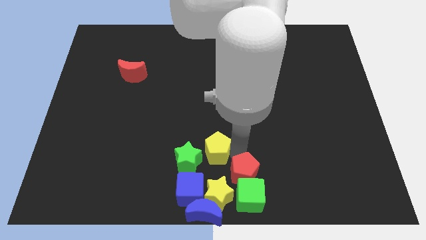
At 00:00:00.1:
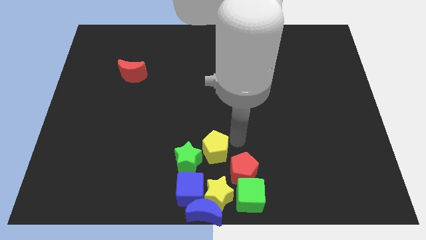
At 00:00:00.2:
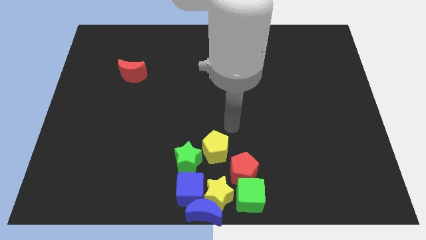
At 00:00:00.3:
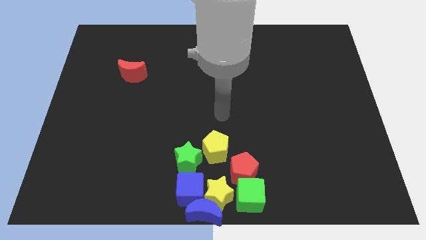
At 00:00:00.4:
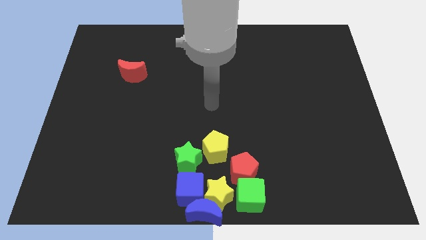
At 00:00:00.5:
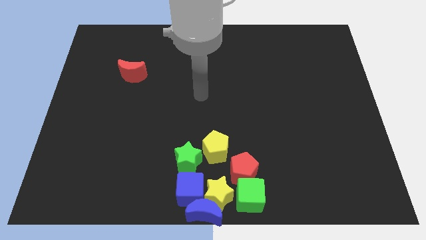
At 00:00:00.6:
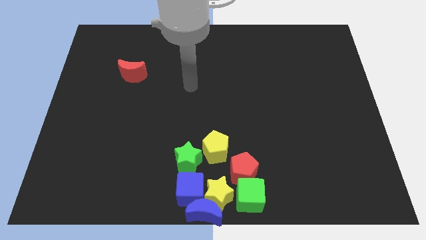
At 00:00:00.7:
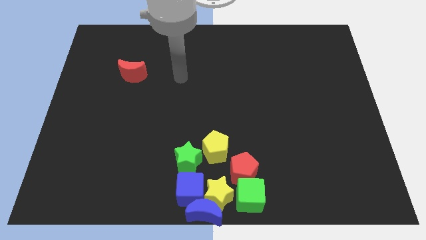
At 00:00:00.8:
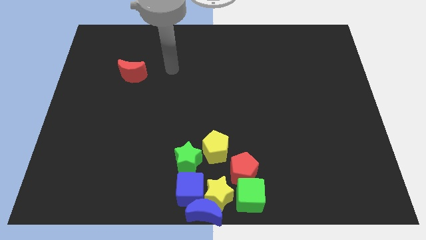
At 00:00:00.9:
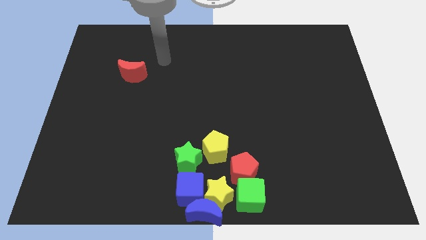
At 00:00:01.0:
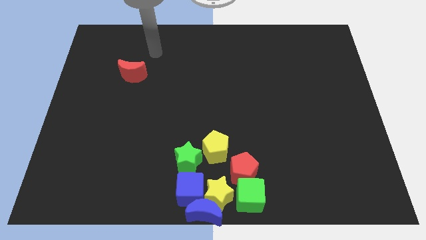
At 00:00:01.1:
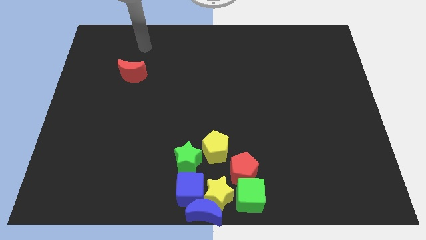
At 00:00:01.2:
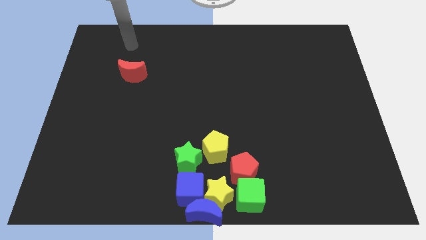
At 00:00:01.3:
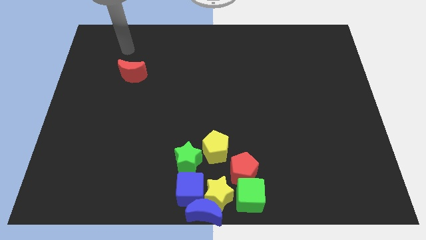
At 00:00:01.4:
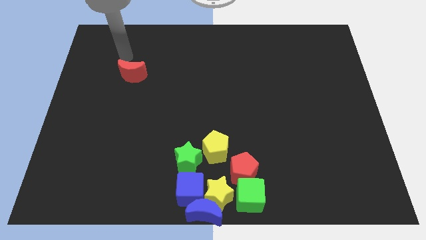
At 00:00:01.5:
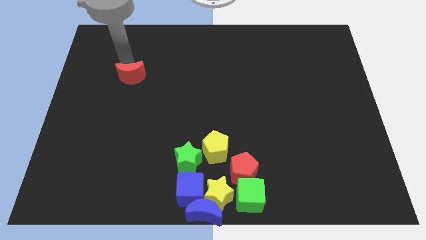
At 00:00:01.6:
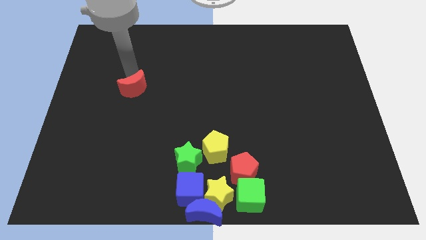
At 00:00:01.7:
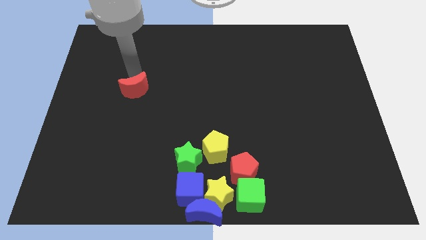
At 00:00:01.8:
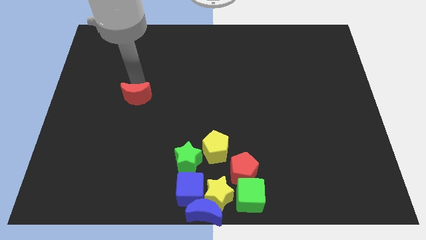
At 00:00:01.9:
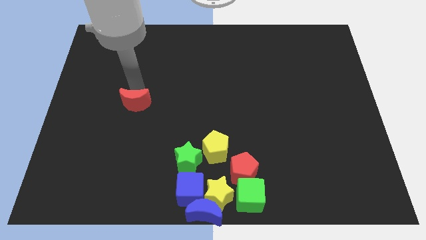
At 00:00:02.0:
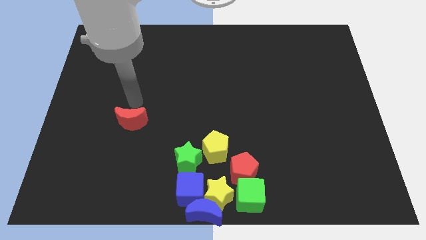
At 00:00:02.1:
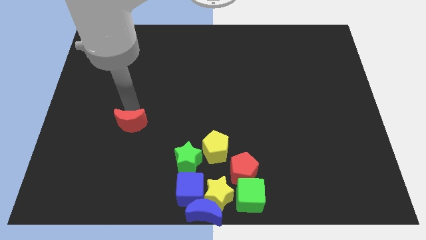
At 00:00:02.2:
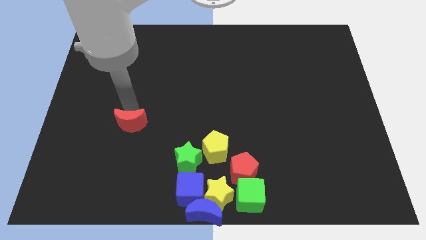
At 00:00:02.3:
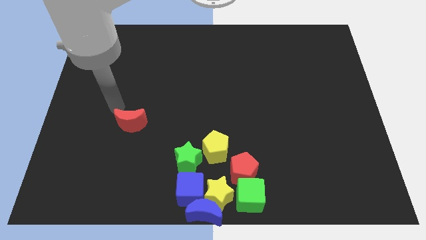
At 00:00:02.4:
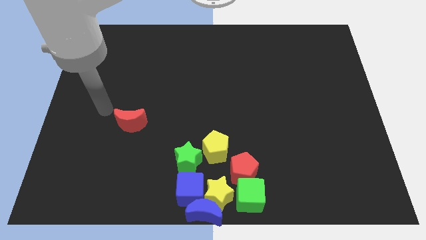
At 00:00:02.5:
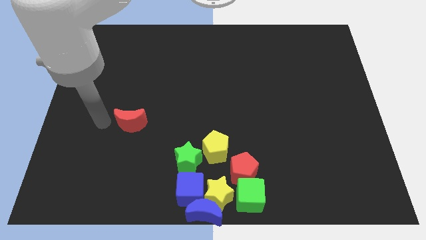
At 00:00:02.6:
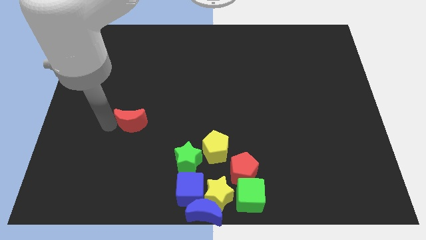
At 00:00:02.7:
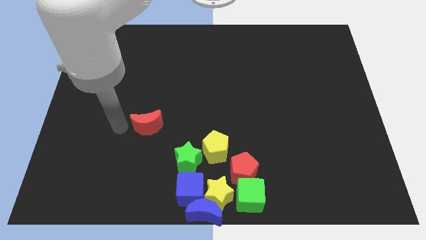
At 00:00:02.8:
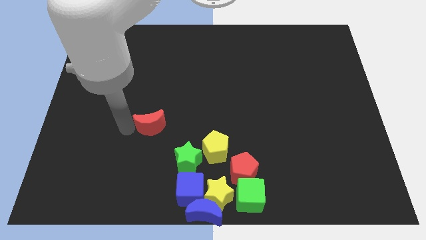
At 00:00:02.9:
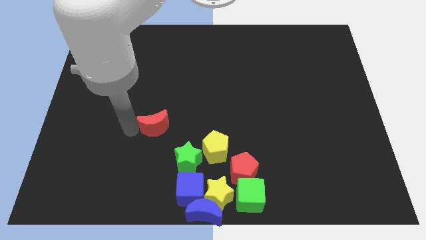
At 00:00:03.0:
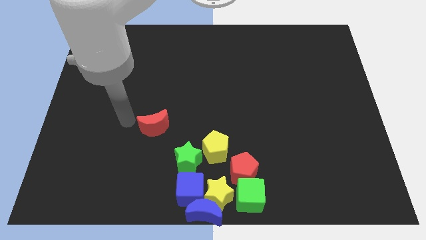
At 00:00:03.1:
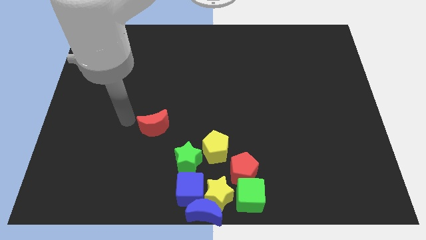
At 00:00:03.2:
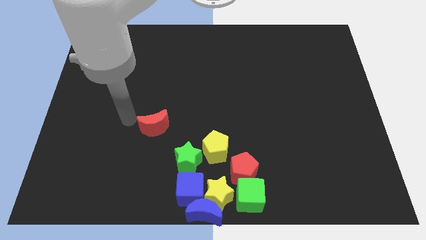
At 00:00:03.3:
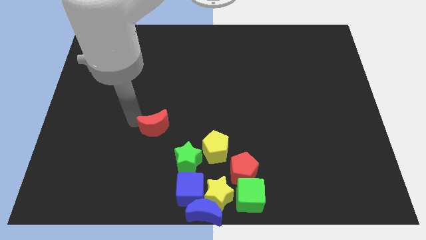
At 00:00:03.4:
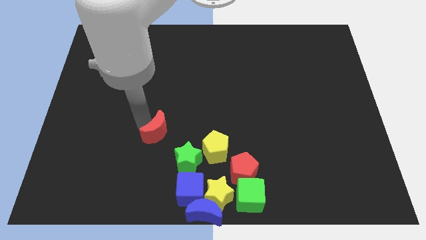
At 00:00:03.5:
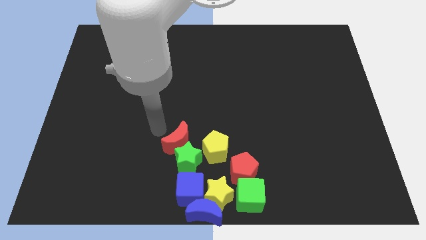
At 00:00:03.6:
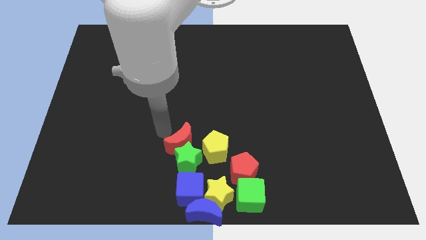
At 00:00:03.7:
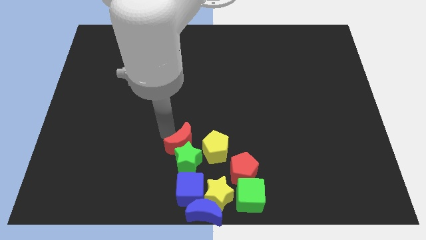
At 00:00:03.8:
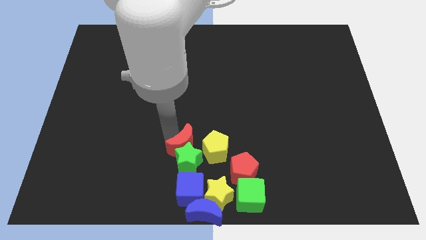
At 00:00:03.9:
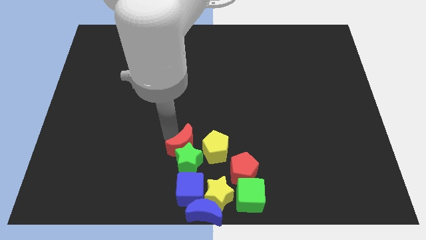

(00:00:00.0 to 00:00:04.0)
move the red moon into the green star

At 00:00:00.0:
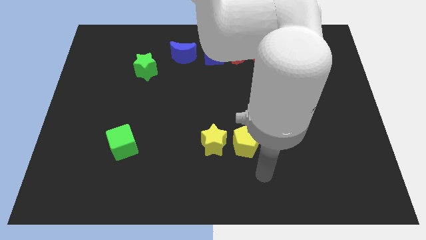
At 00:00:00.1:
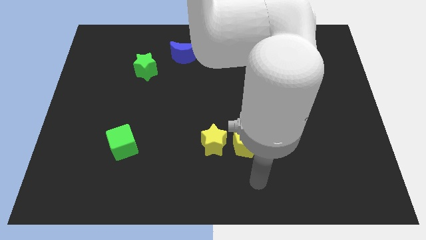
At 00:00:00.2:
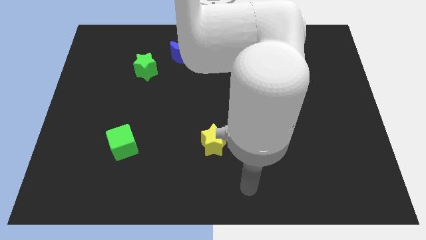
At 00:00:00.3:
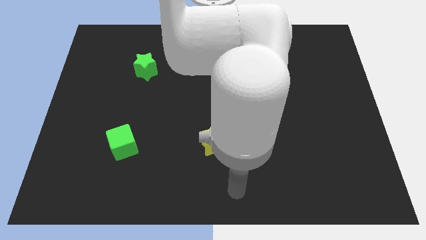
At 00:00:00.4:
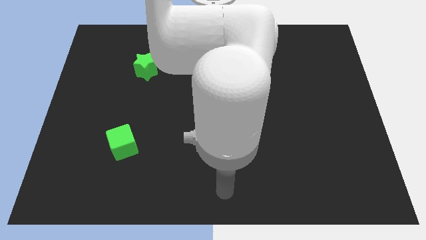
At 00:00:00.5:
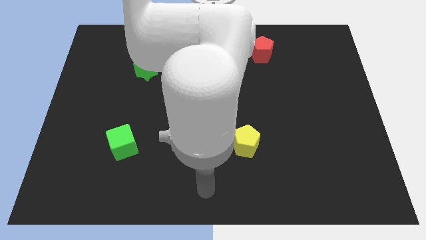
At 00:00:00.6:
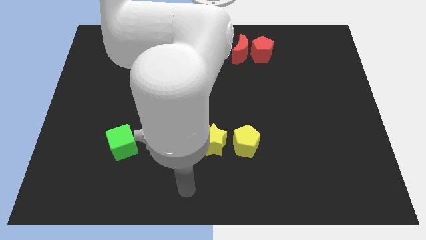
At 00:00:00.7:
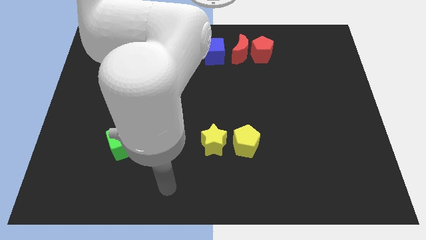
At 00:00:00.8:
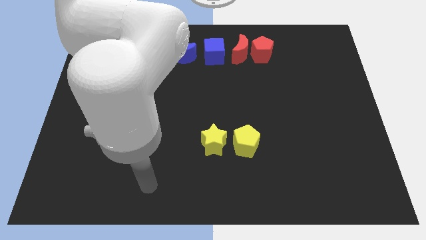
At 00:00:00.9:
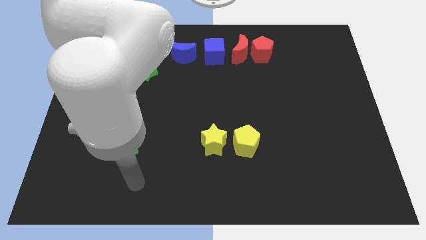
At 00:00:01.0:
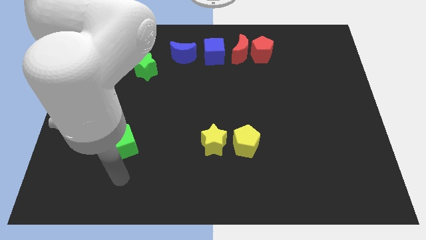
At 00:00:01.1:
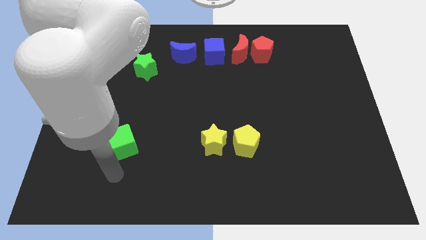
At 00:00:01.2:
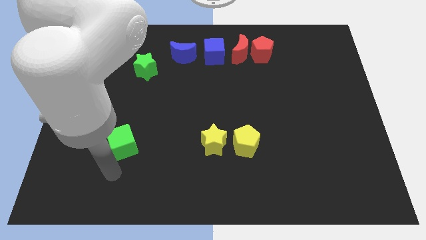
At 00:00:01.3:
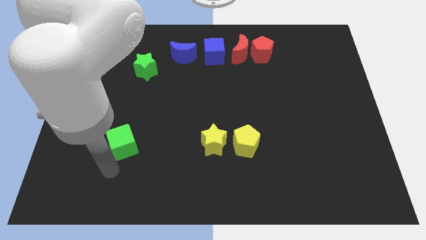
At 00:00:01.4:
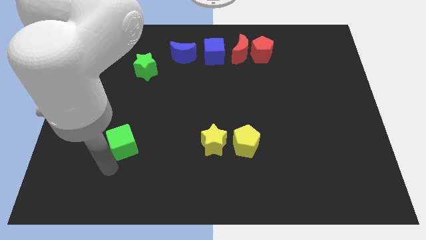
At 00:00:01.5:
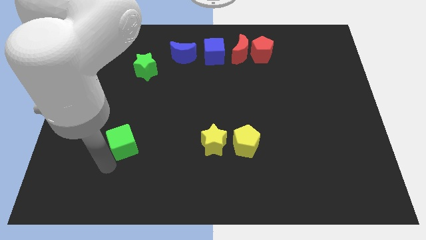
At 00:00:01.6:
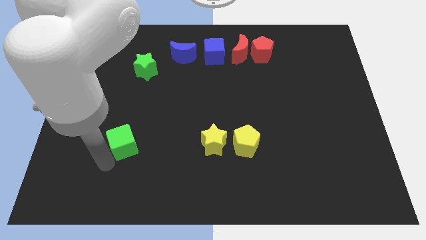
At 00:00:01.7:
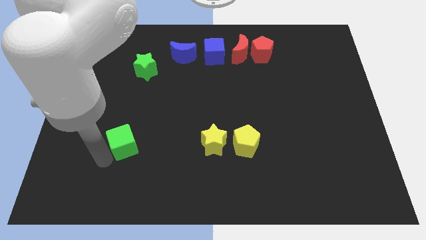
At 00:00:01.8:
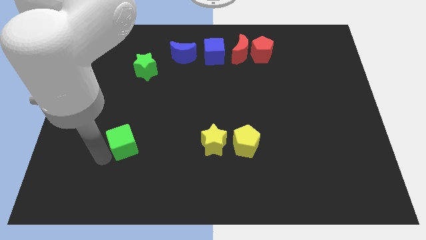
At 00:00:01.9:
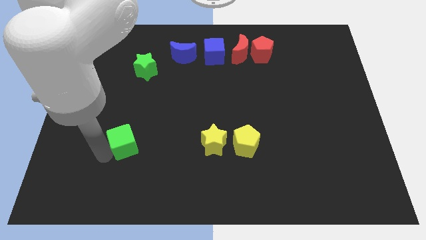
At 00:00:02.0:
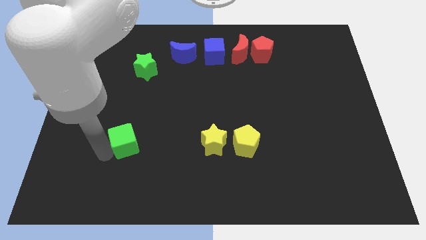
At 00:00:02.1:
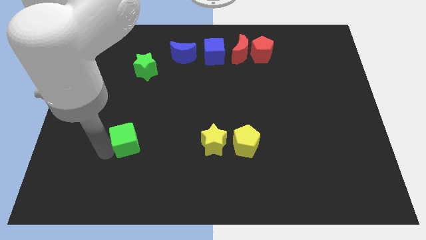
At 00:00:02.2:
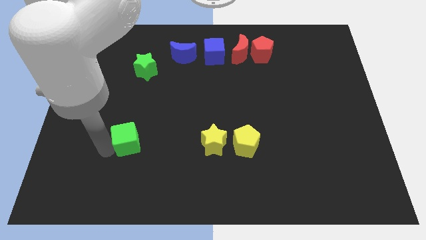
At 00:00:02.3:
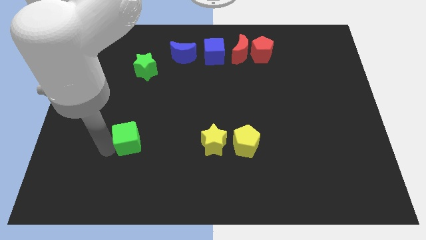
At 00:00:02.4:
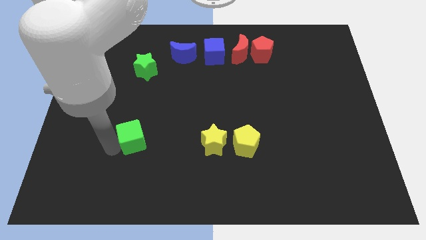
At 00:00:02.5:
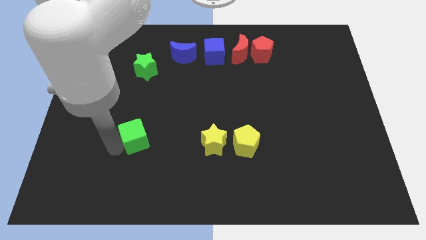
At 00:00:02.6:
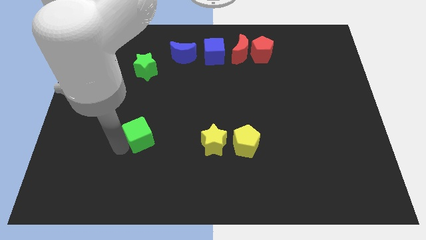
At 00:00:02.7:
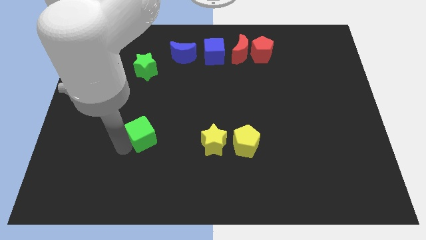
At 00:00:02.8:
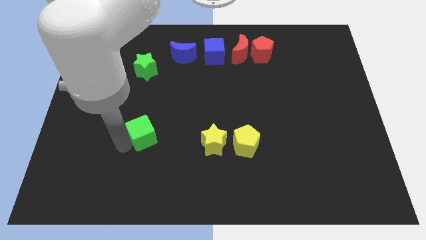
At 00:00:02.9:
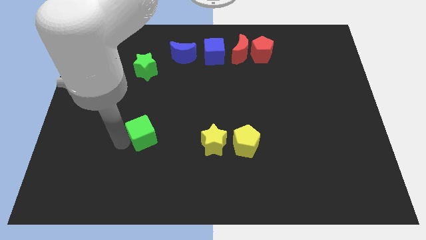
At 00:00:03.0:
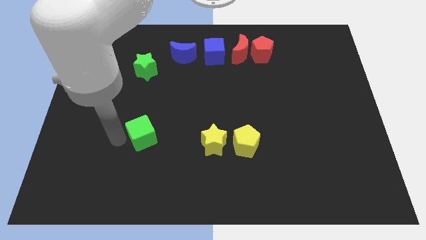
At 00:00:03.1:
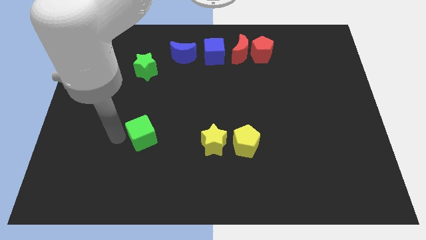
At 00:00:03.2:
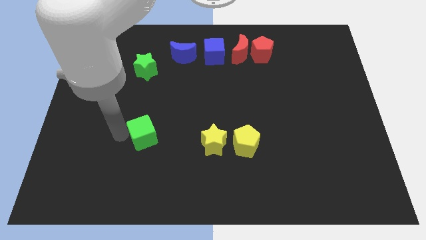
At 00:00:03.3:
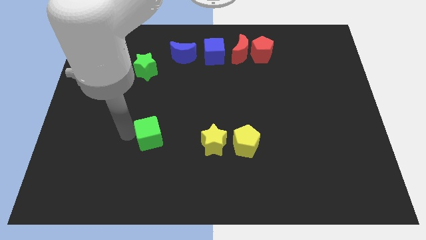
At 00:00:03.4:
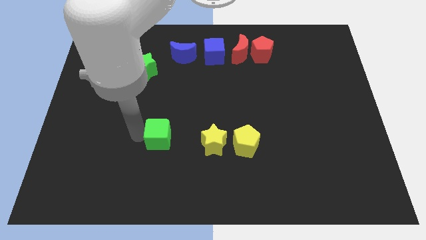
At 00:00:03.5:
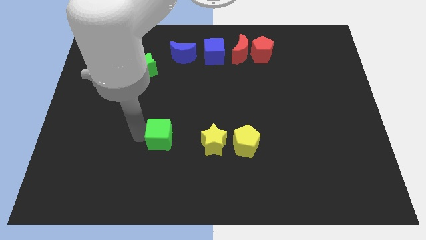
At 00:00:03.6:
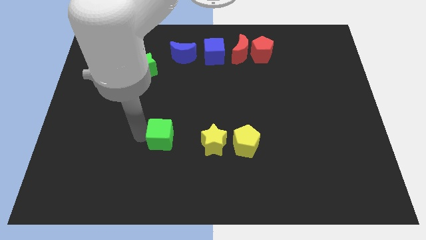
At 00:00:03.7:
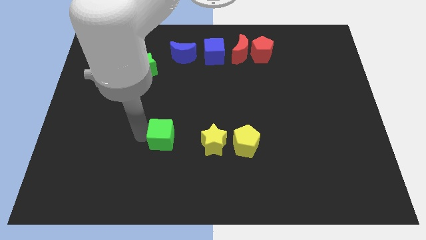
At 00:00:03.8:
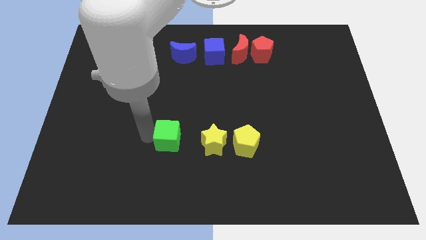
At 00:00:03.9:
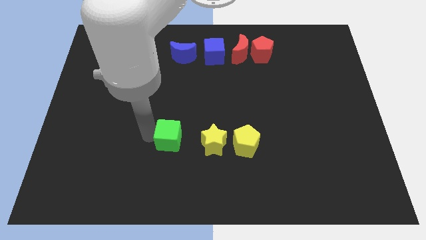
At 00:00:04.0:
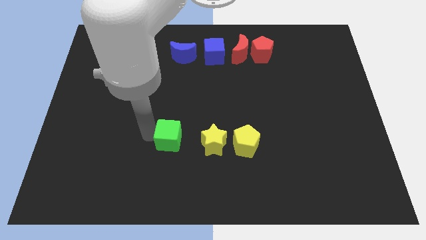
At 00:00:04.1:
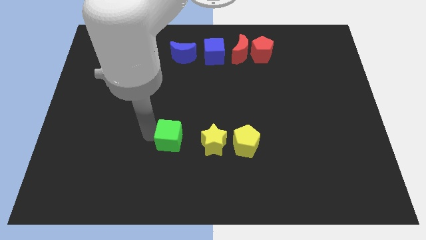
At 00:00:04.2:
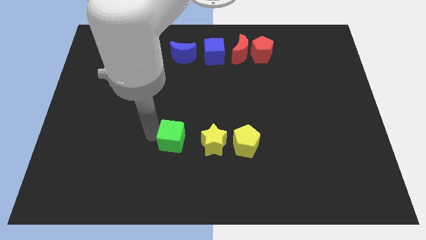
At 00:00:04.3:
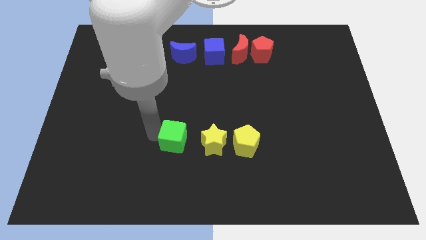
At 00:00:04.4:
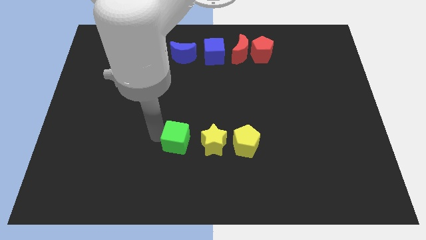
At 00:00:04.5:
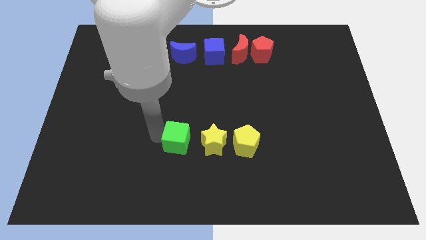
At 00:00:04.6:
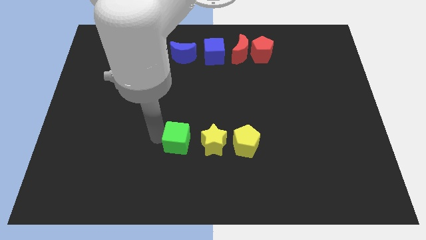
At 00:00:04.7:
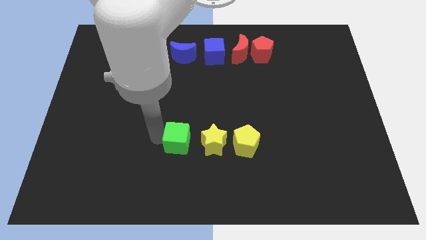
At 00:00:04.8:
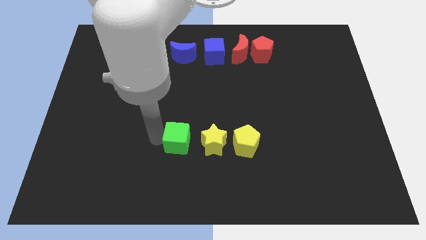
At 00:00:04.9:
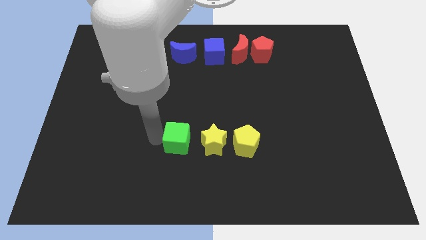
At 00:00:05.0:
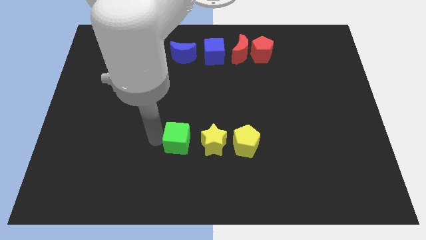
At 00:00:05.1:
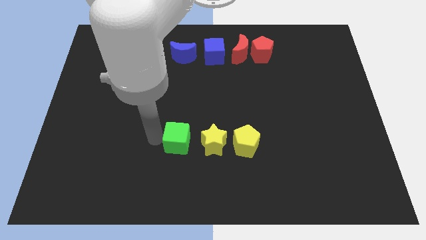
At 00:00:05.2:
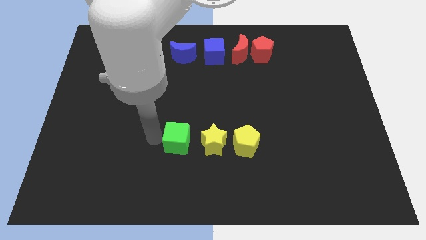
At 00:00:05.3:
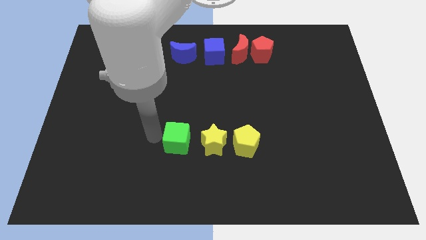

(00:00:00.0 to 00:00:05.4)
move the green cube to the left of the yellow star
